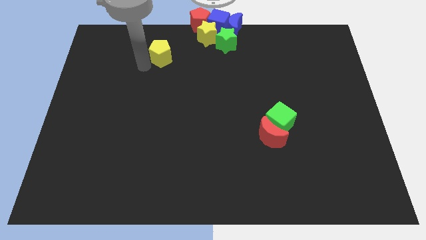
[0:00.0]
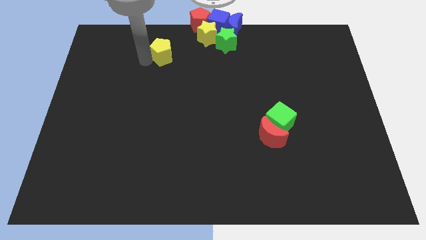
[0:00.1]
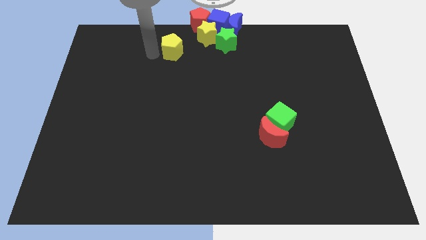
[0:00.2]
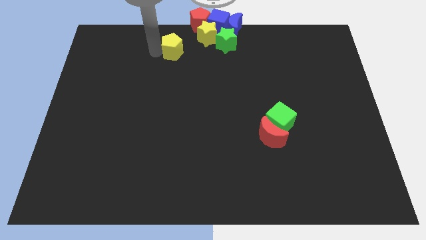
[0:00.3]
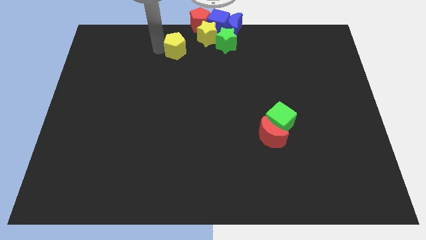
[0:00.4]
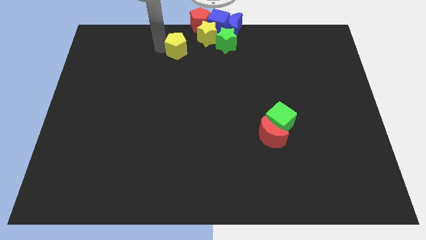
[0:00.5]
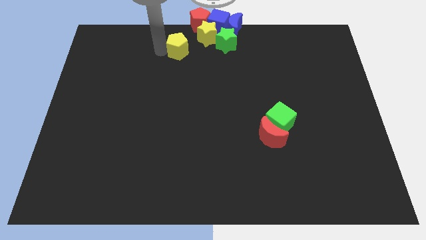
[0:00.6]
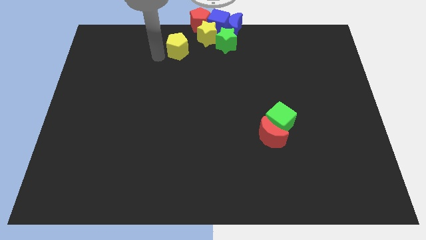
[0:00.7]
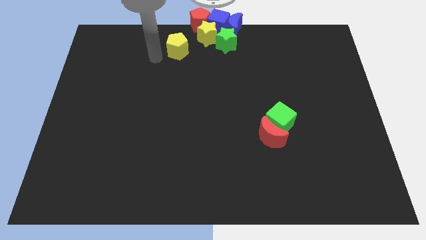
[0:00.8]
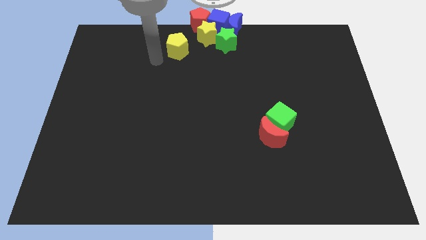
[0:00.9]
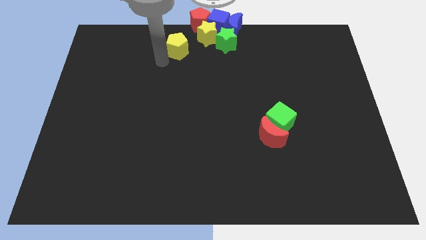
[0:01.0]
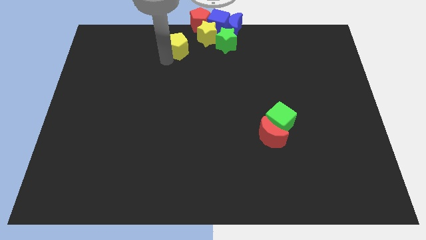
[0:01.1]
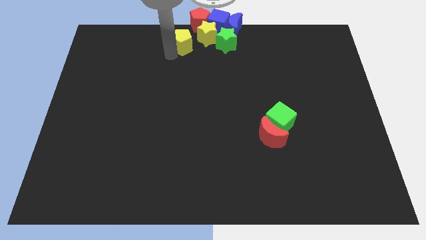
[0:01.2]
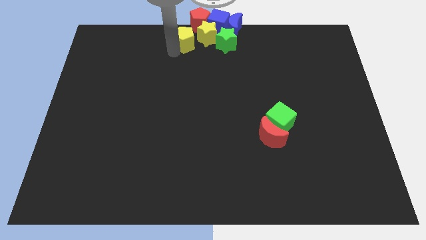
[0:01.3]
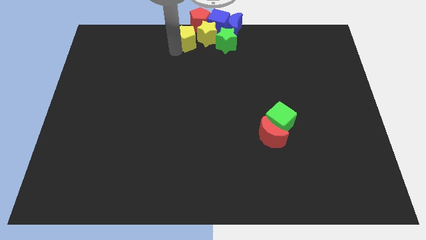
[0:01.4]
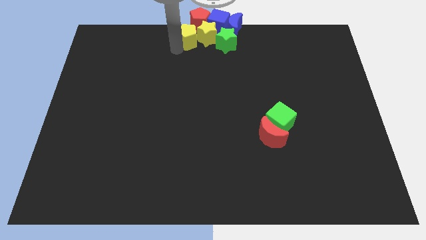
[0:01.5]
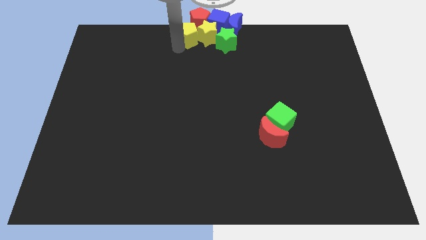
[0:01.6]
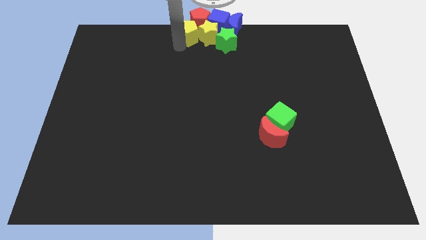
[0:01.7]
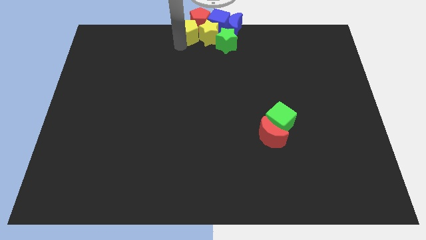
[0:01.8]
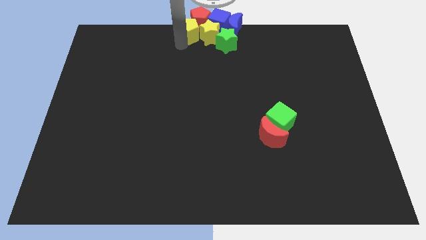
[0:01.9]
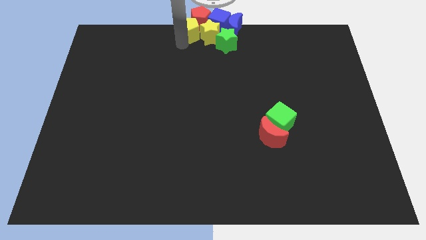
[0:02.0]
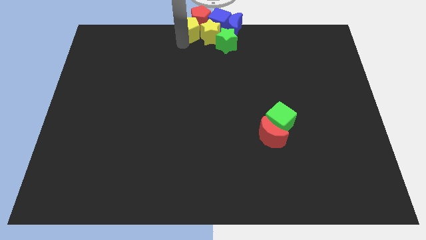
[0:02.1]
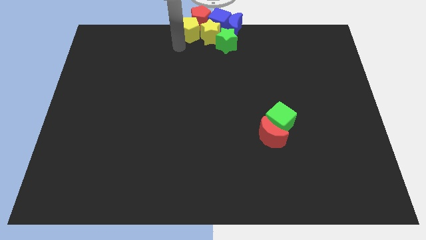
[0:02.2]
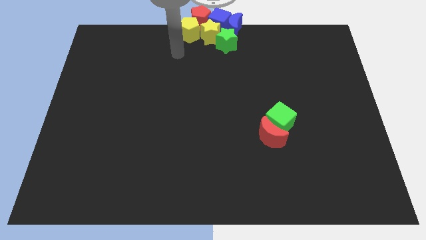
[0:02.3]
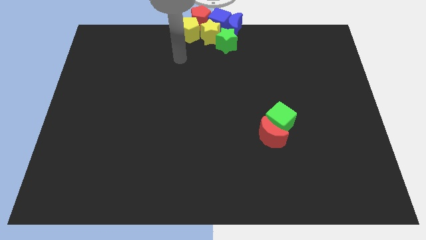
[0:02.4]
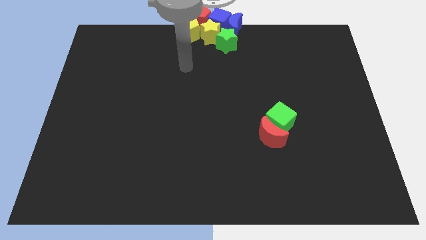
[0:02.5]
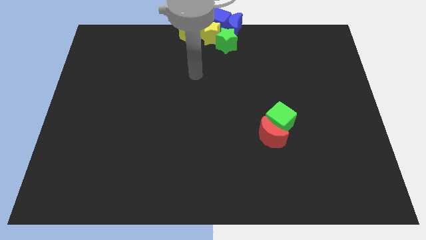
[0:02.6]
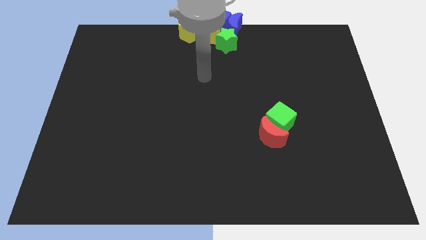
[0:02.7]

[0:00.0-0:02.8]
slide the yellow pentagon into the red pentagon

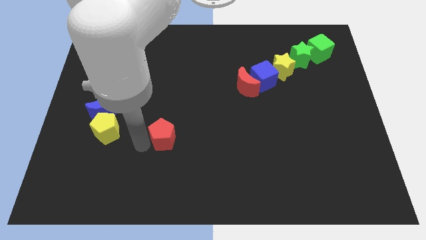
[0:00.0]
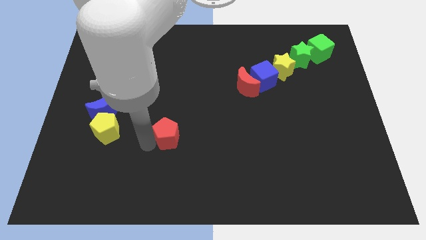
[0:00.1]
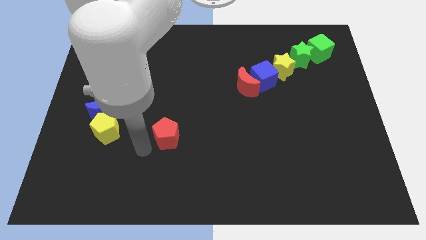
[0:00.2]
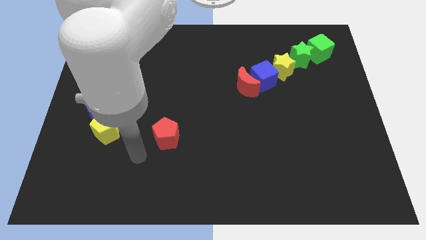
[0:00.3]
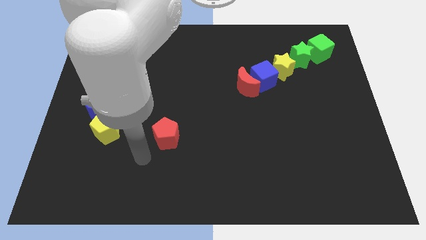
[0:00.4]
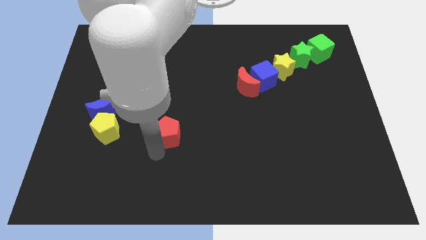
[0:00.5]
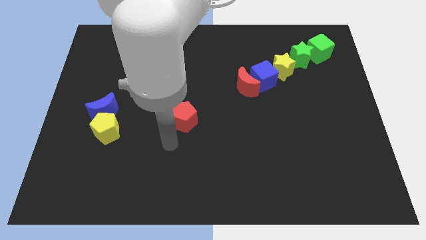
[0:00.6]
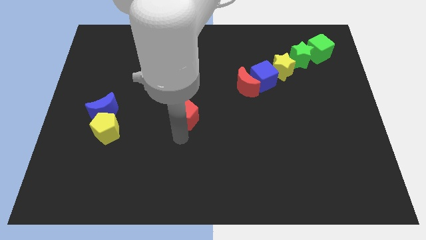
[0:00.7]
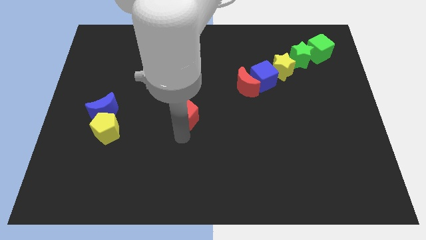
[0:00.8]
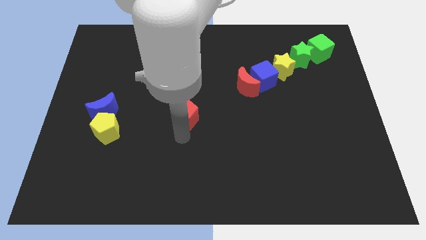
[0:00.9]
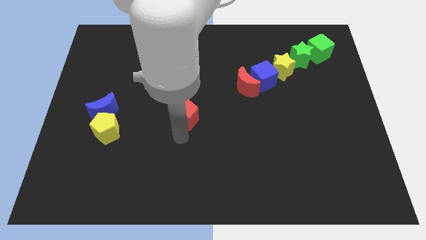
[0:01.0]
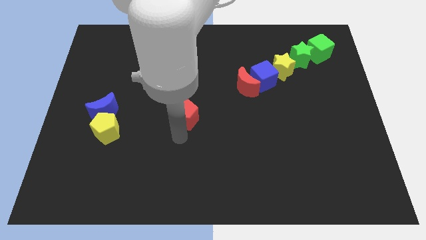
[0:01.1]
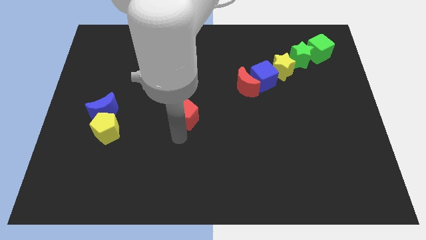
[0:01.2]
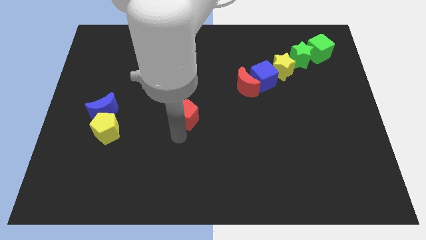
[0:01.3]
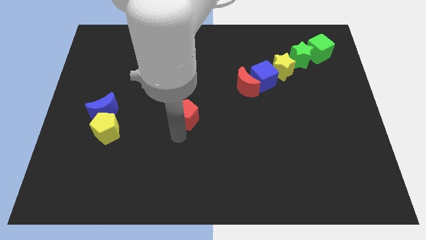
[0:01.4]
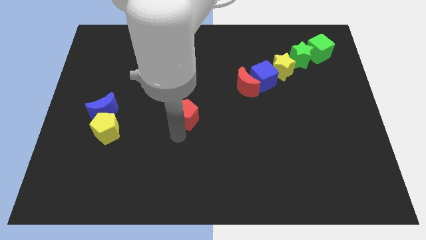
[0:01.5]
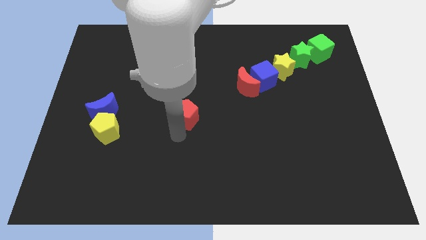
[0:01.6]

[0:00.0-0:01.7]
push the red pentagon towards the red crescent

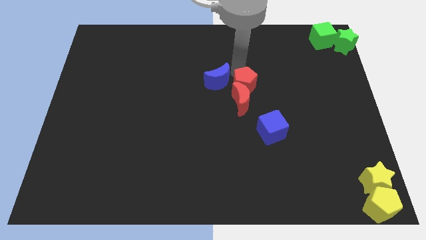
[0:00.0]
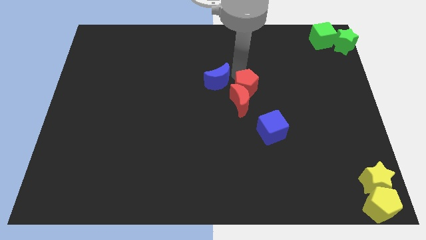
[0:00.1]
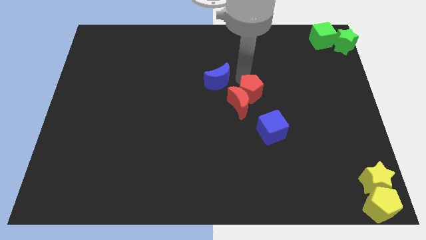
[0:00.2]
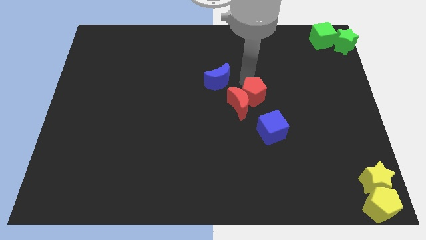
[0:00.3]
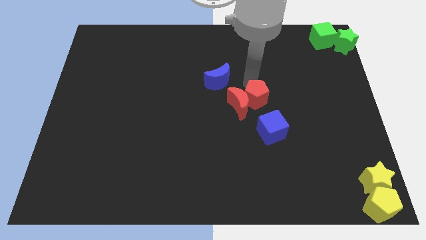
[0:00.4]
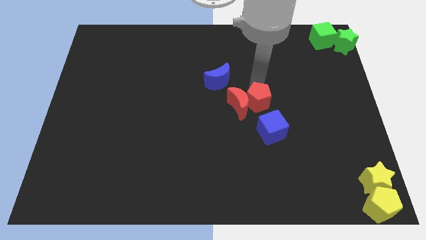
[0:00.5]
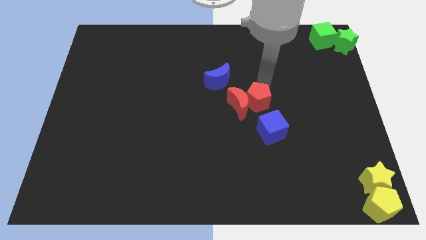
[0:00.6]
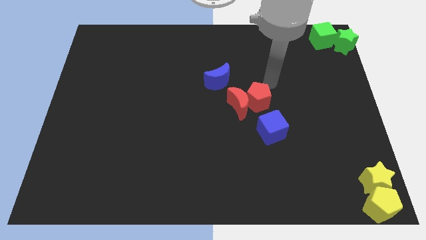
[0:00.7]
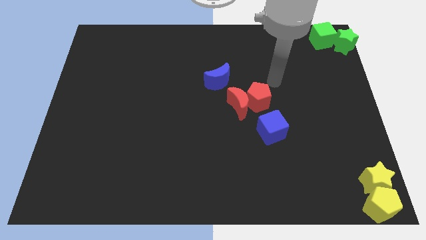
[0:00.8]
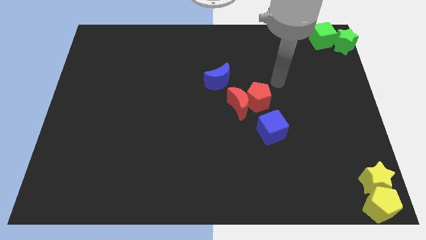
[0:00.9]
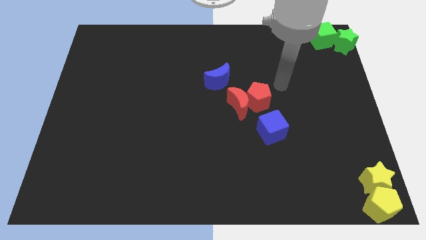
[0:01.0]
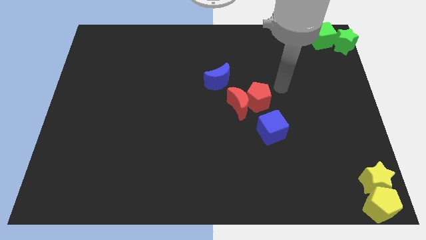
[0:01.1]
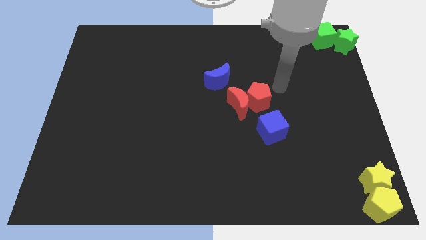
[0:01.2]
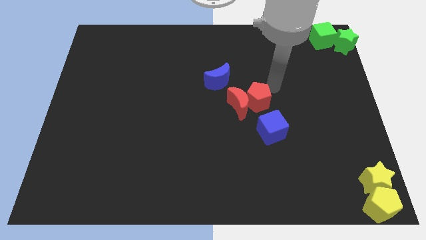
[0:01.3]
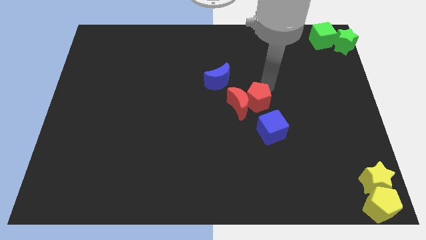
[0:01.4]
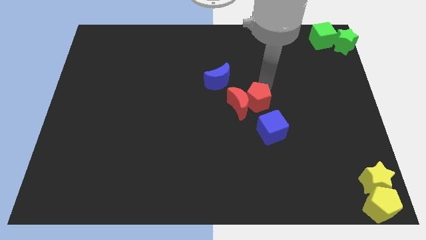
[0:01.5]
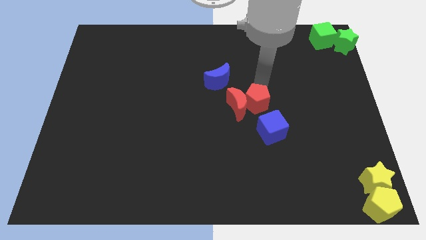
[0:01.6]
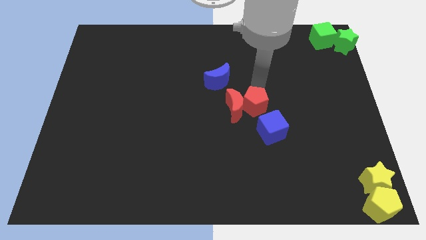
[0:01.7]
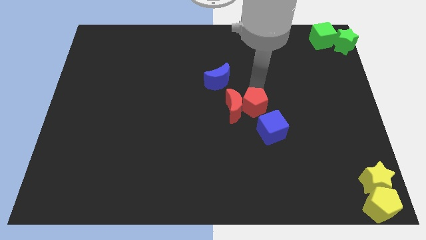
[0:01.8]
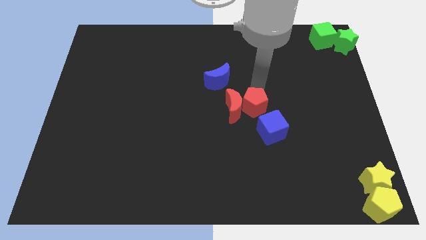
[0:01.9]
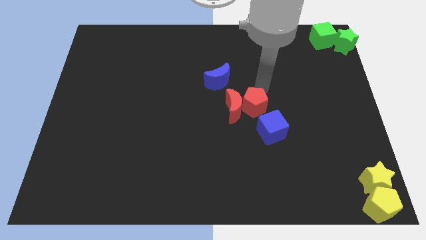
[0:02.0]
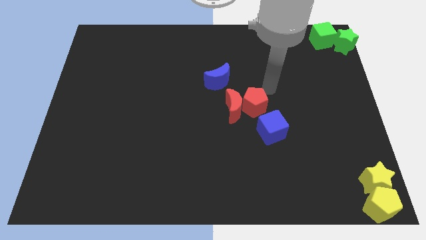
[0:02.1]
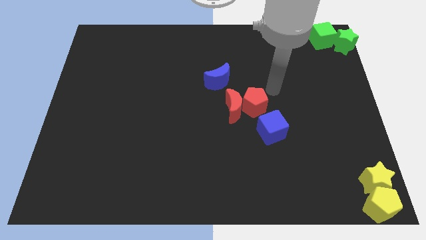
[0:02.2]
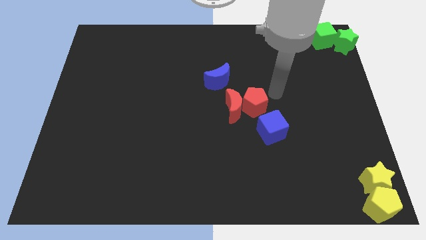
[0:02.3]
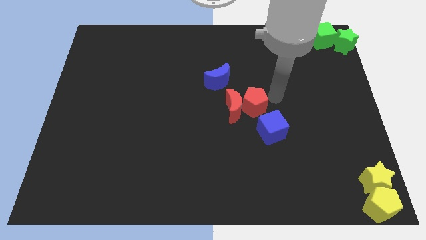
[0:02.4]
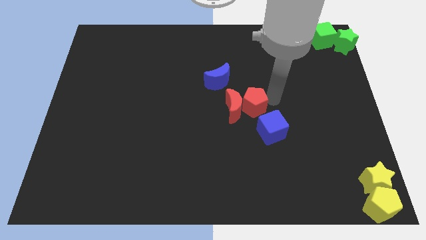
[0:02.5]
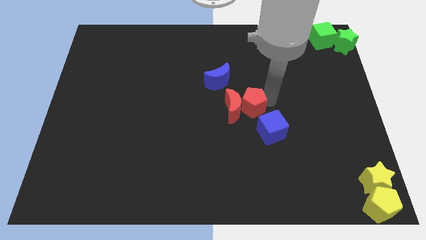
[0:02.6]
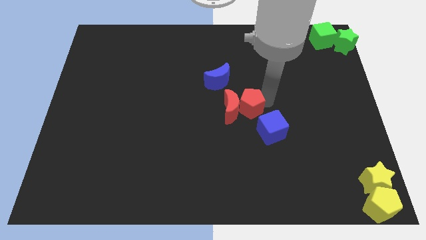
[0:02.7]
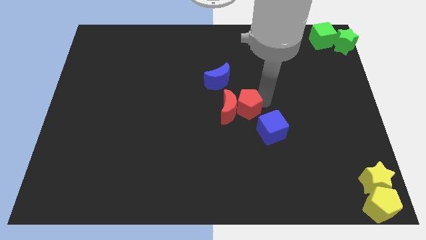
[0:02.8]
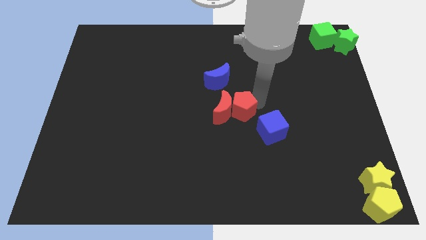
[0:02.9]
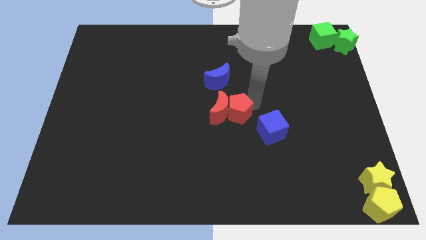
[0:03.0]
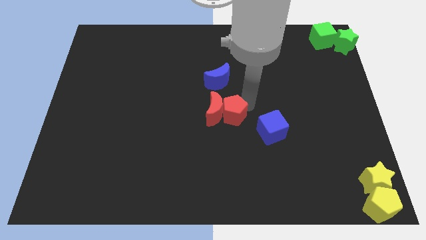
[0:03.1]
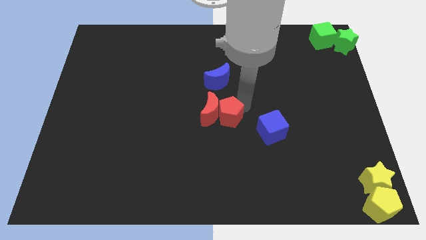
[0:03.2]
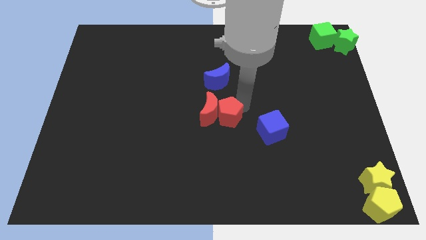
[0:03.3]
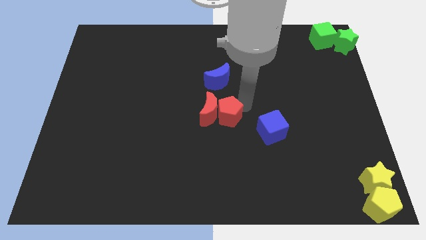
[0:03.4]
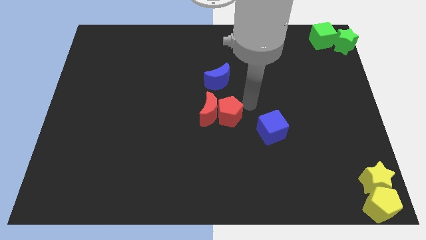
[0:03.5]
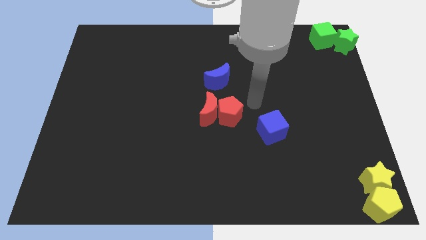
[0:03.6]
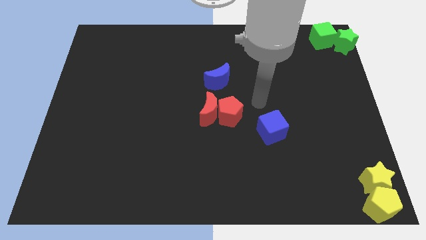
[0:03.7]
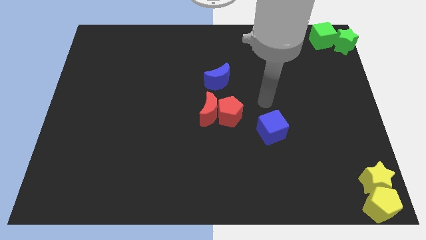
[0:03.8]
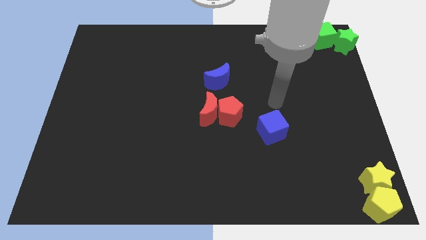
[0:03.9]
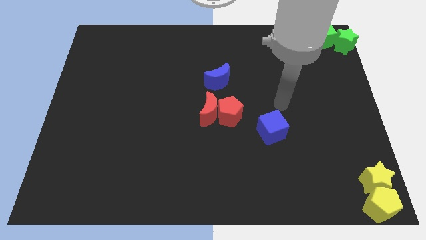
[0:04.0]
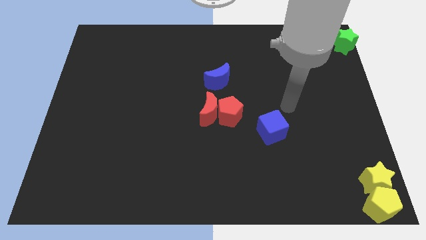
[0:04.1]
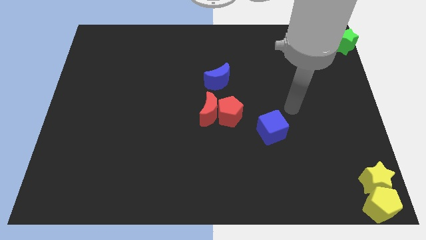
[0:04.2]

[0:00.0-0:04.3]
move the red pentagon and red crescent to the center of the board

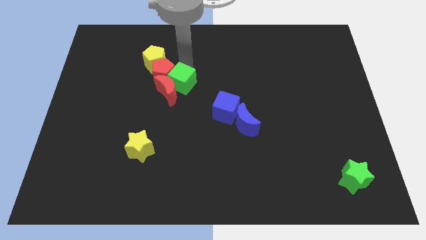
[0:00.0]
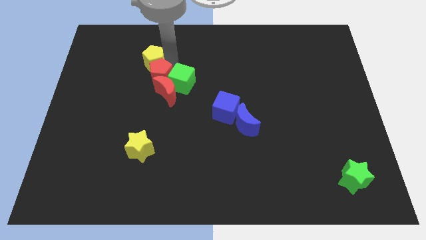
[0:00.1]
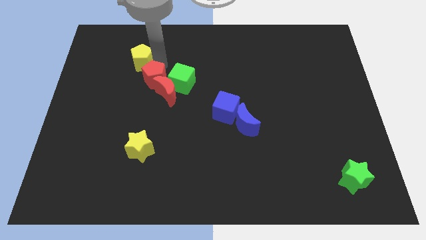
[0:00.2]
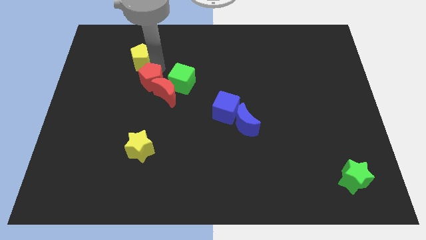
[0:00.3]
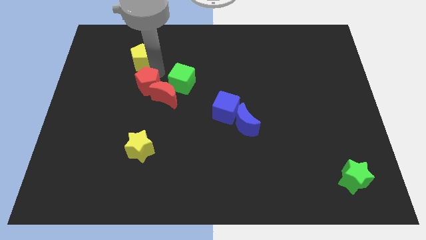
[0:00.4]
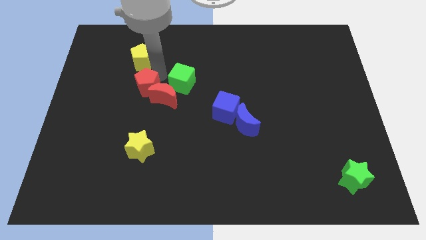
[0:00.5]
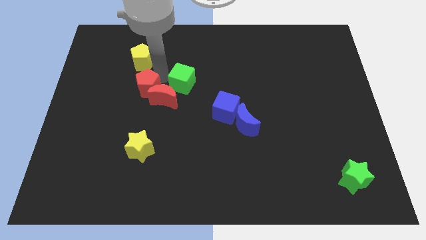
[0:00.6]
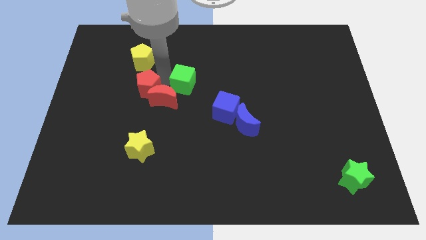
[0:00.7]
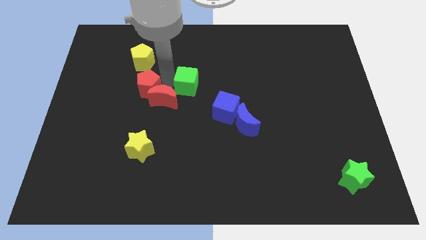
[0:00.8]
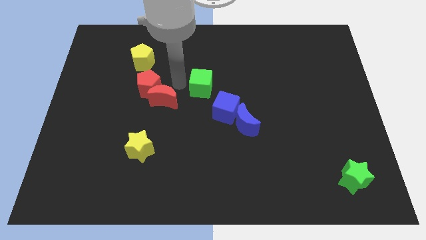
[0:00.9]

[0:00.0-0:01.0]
push the red pentagon into the red moon
